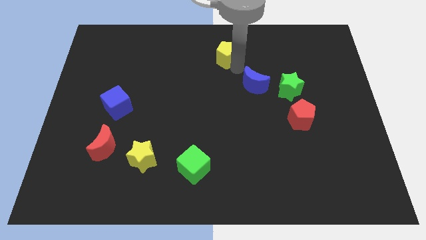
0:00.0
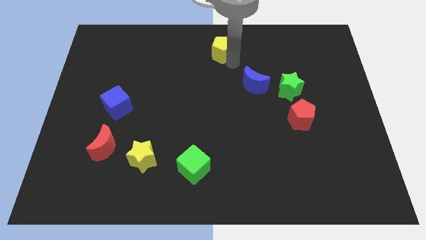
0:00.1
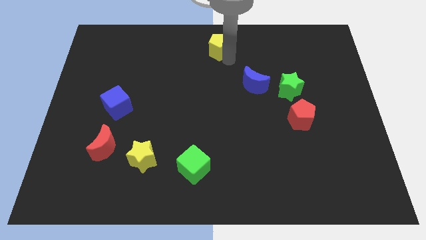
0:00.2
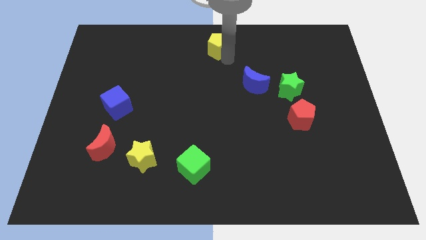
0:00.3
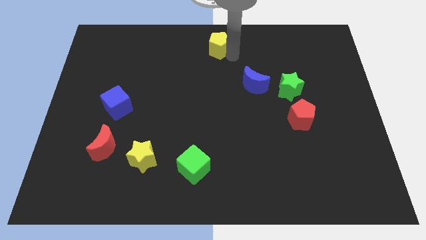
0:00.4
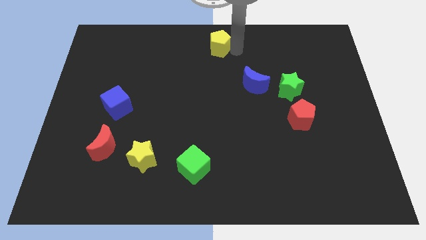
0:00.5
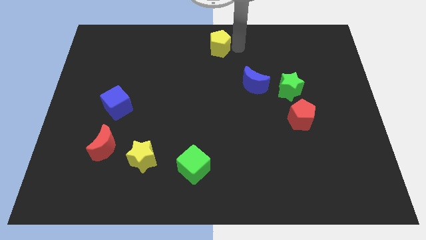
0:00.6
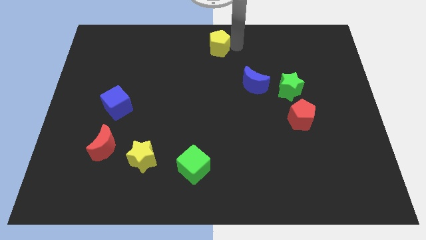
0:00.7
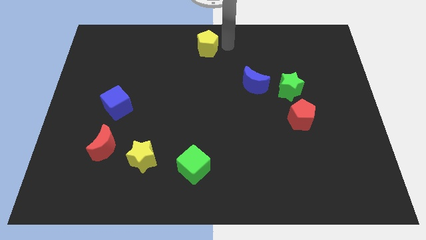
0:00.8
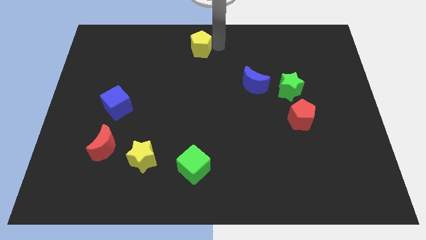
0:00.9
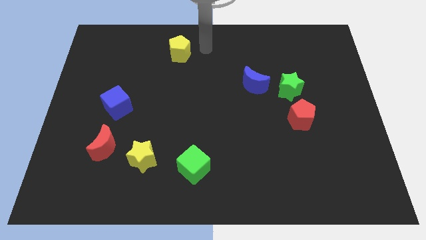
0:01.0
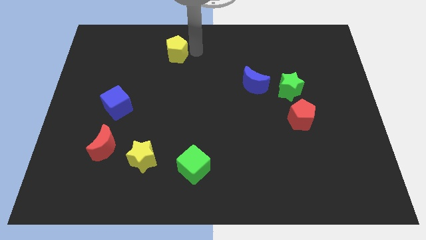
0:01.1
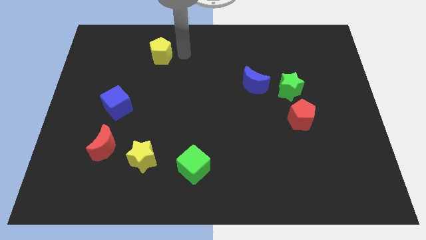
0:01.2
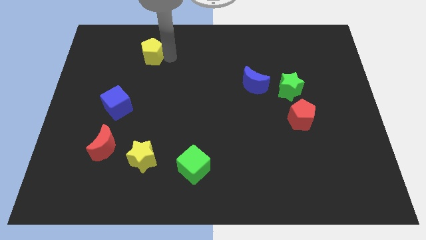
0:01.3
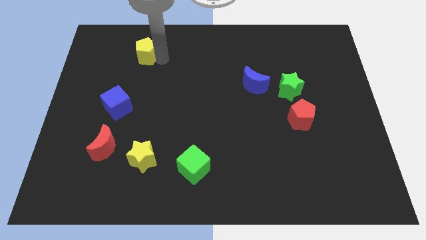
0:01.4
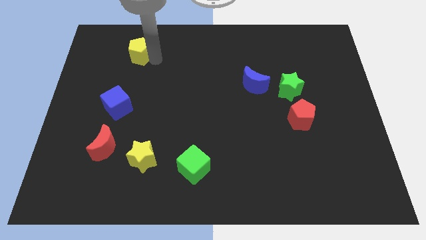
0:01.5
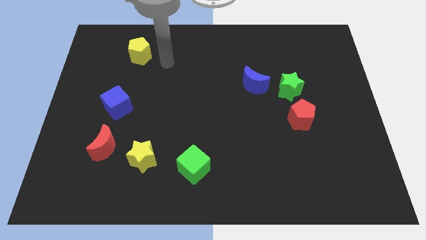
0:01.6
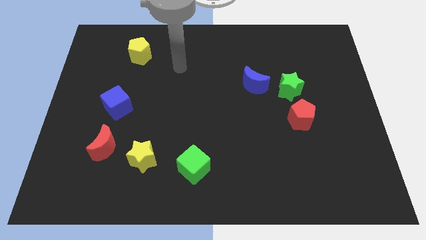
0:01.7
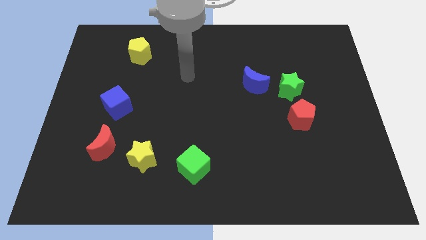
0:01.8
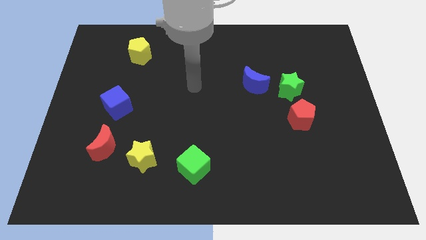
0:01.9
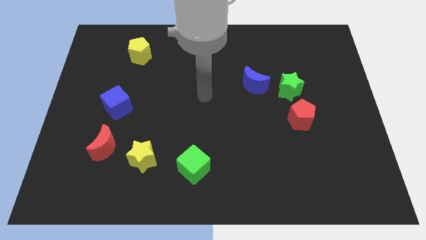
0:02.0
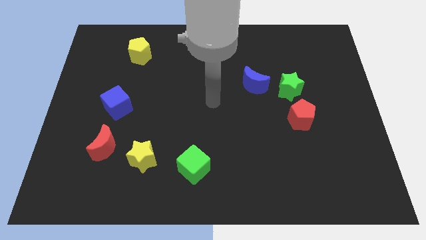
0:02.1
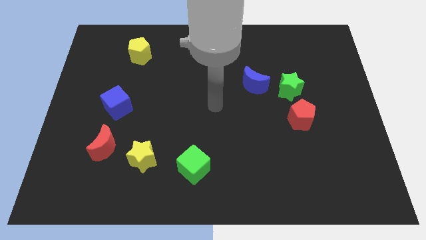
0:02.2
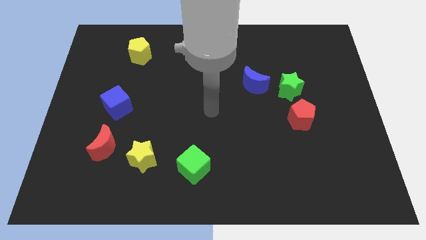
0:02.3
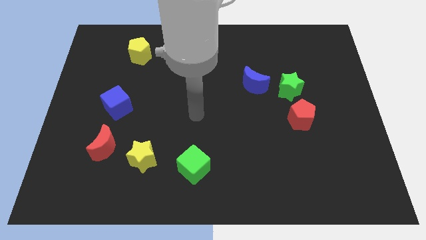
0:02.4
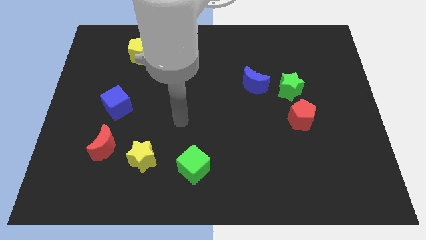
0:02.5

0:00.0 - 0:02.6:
push the yellow pentagon to the left side of the board and move away

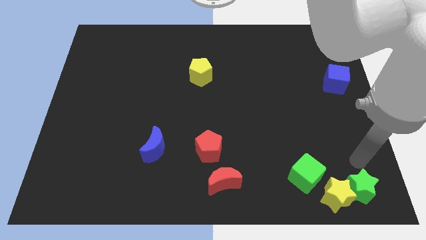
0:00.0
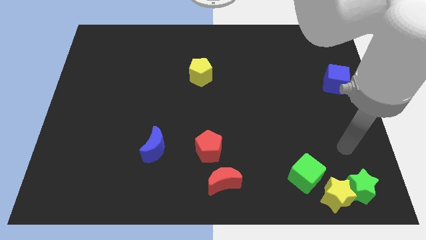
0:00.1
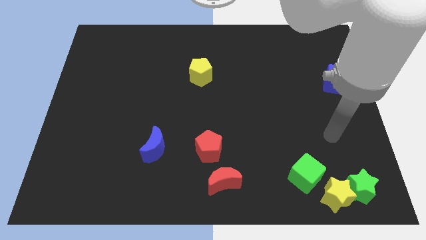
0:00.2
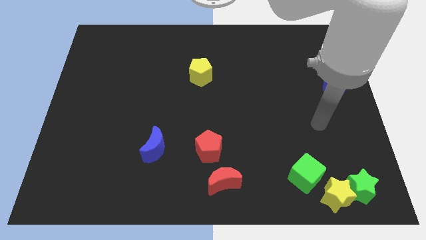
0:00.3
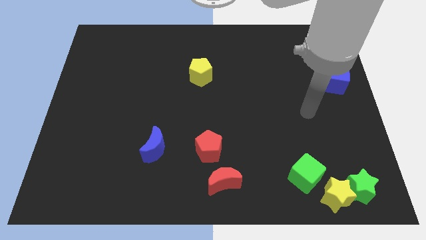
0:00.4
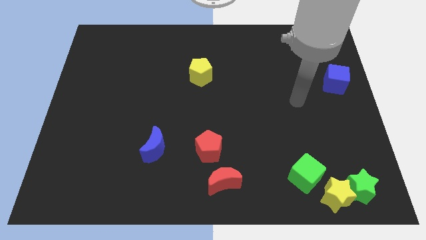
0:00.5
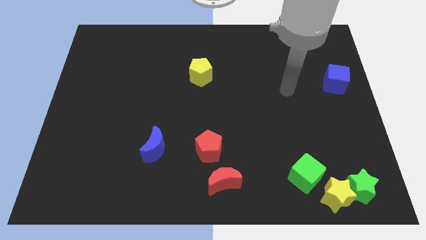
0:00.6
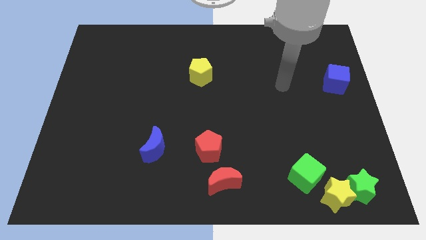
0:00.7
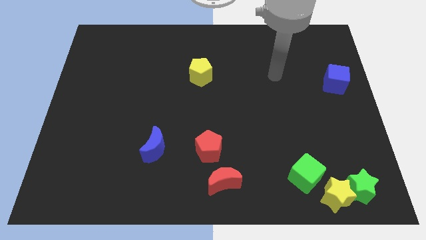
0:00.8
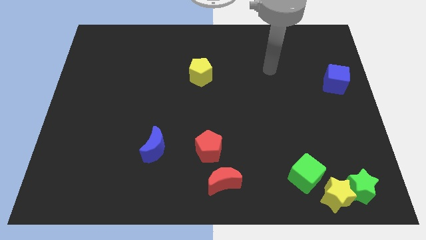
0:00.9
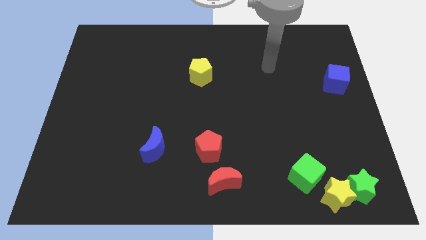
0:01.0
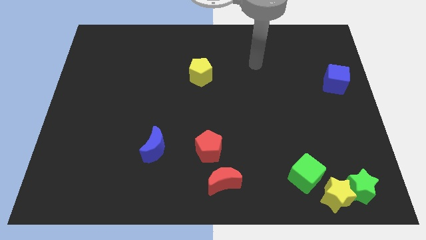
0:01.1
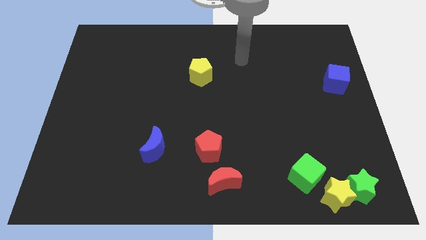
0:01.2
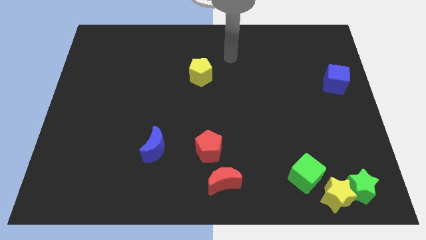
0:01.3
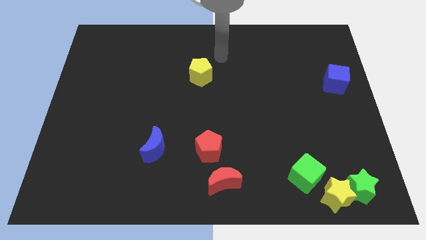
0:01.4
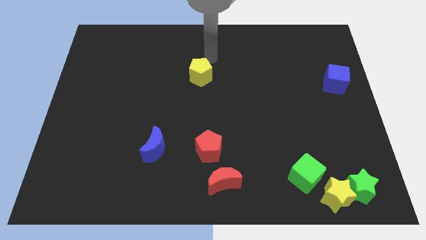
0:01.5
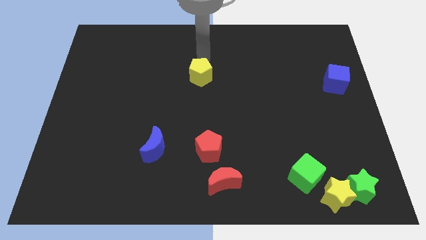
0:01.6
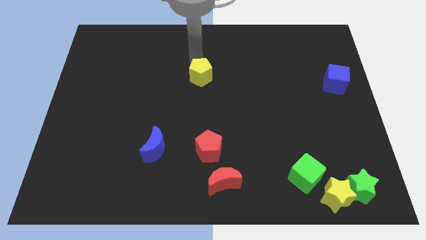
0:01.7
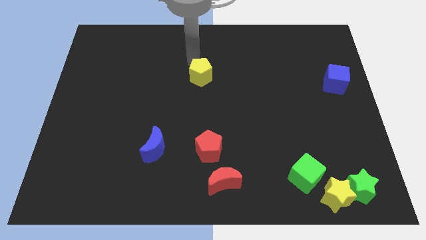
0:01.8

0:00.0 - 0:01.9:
point your hand above the yellow pentagon

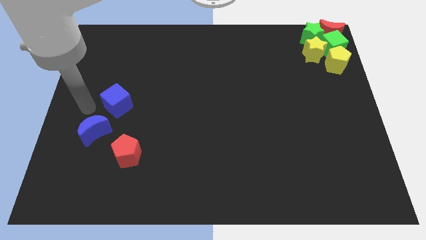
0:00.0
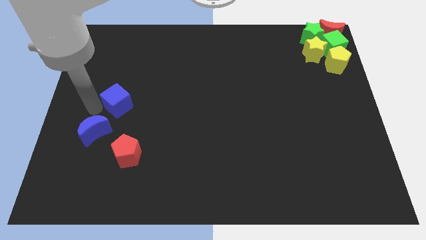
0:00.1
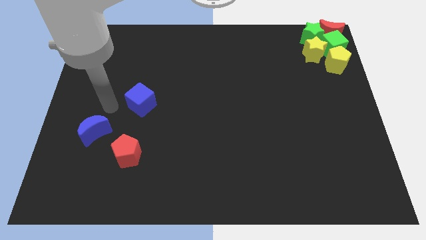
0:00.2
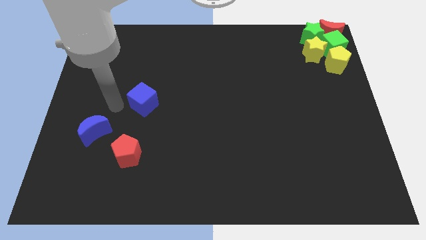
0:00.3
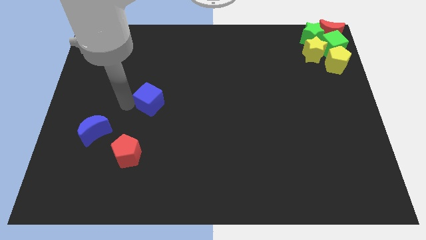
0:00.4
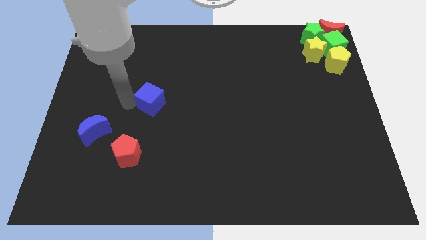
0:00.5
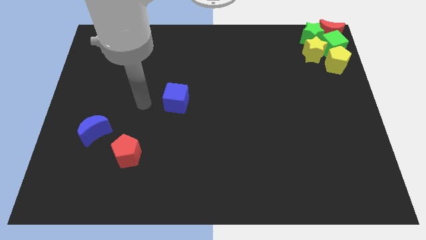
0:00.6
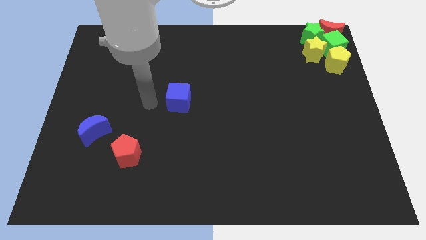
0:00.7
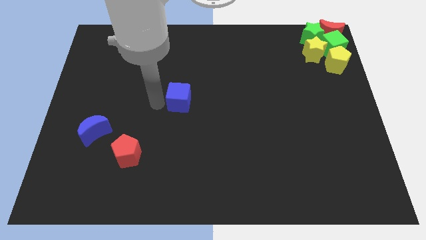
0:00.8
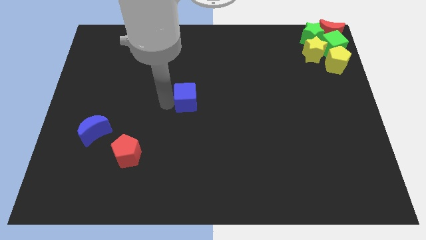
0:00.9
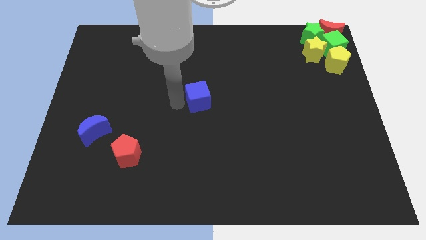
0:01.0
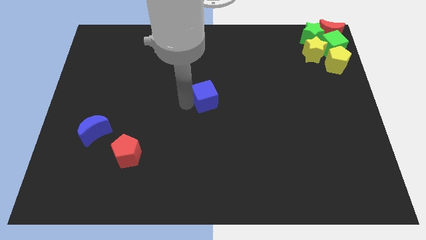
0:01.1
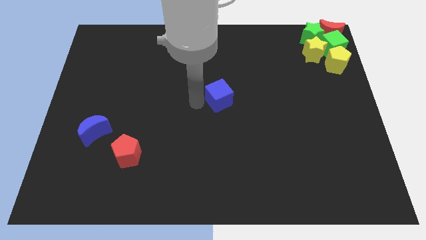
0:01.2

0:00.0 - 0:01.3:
move the blue cube towards the right side of the board

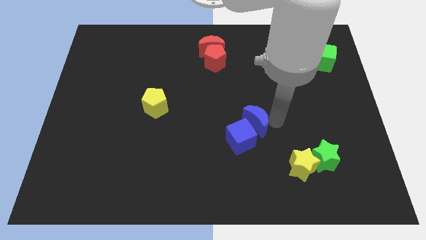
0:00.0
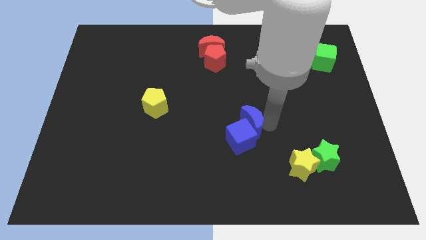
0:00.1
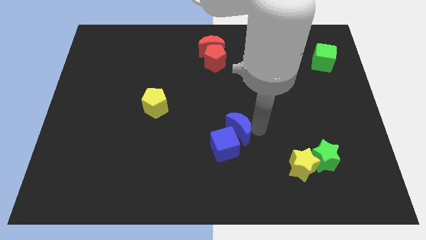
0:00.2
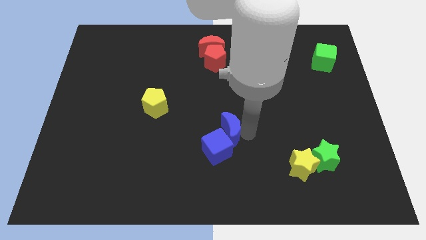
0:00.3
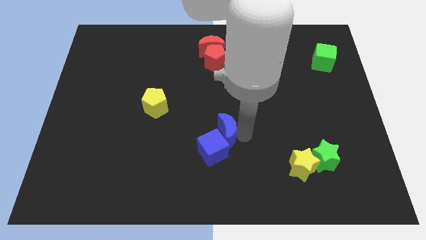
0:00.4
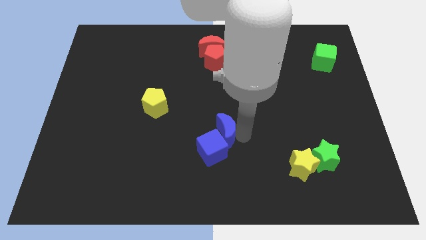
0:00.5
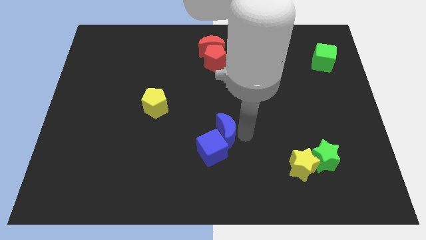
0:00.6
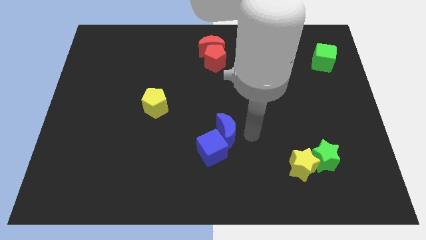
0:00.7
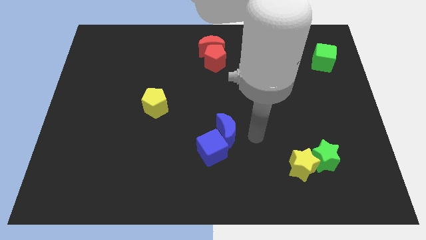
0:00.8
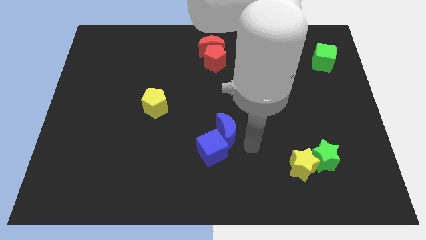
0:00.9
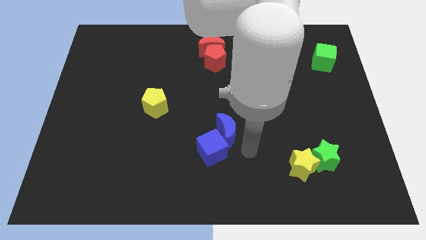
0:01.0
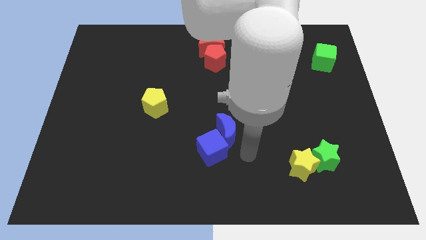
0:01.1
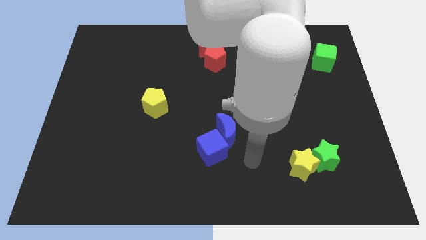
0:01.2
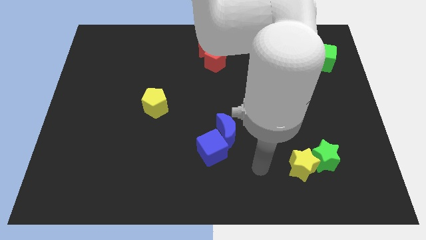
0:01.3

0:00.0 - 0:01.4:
place both the blue blocks diagonally on the bottom right side of the yellow pentagon

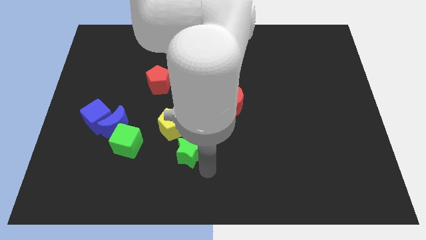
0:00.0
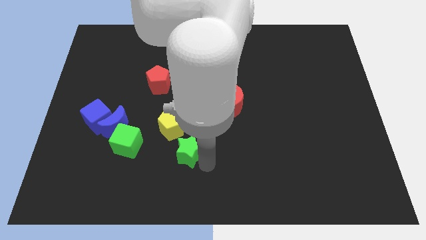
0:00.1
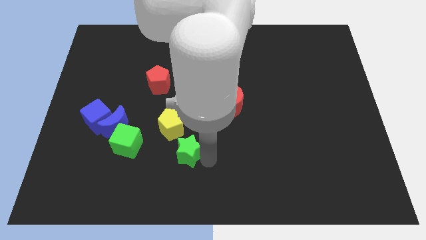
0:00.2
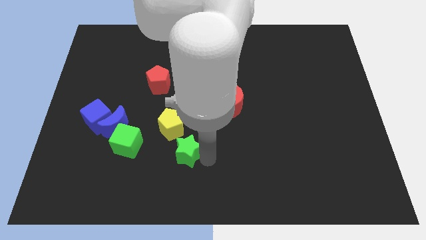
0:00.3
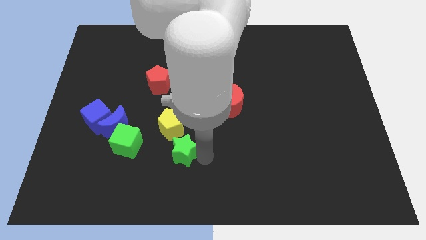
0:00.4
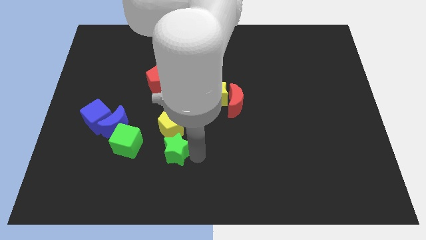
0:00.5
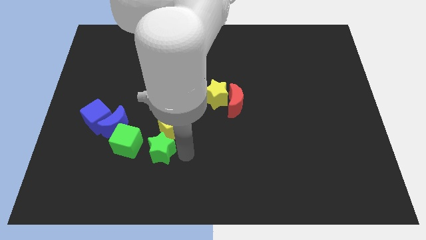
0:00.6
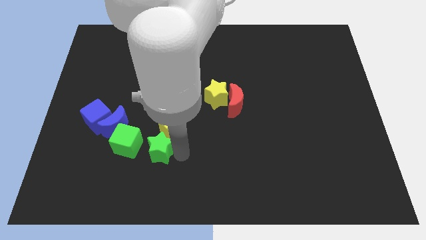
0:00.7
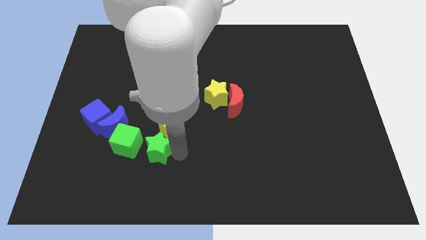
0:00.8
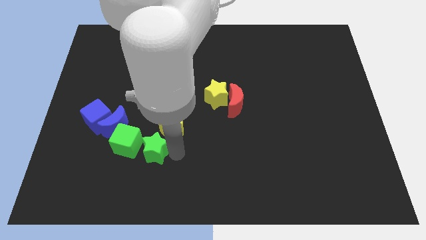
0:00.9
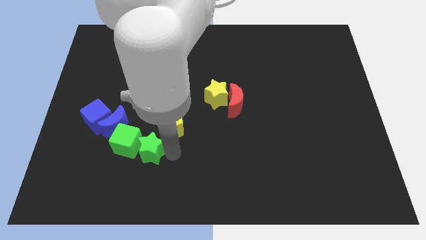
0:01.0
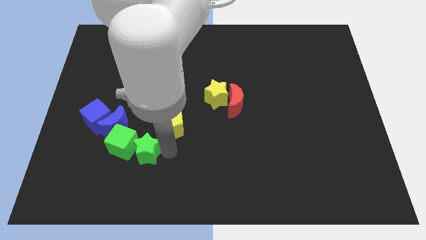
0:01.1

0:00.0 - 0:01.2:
place the green star to the right of green cube

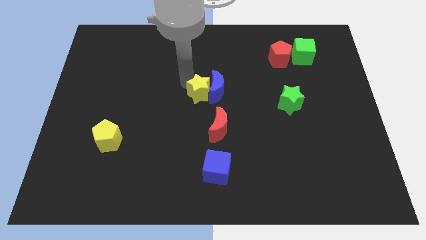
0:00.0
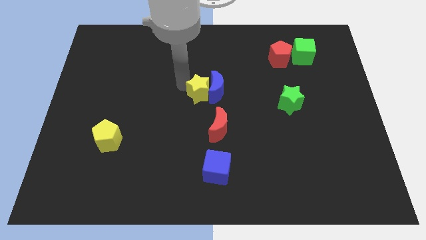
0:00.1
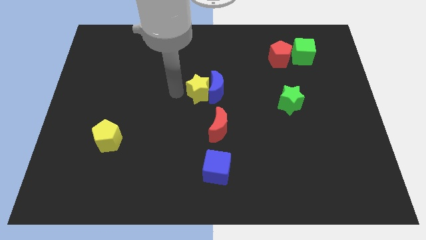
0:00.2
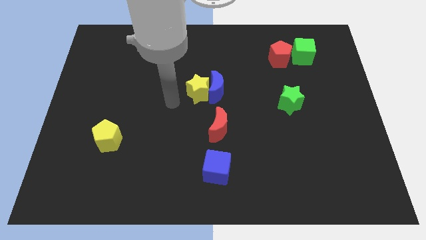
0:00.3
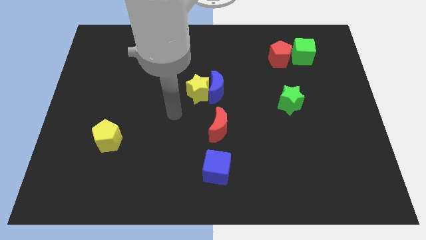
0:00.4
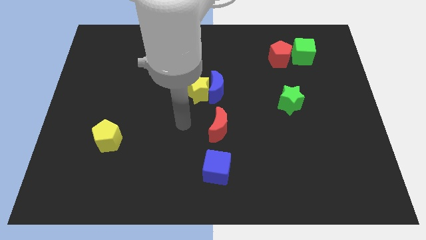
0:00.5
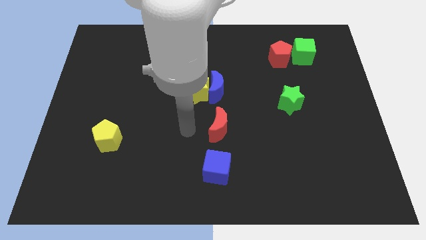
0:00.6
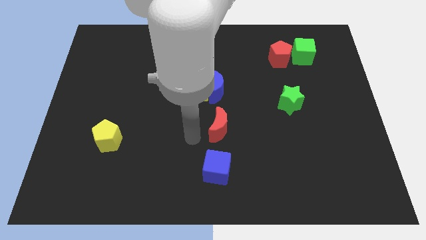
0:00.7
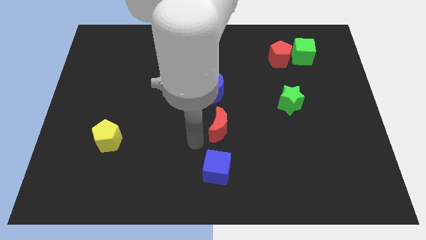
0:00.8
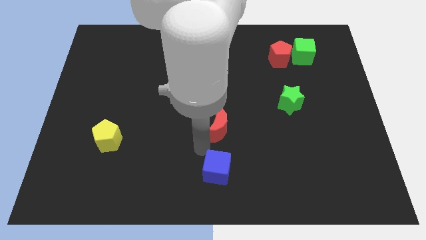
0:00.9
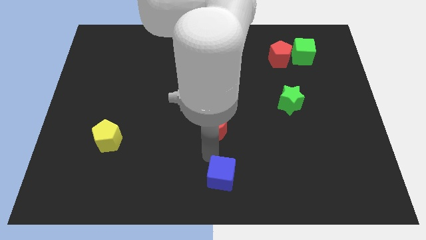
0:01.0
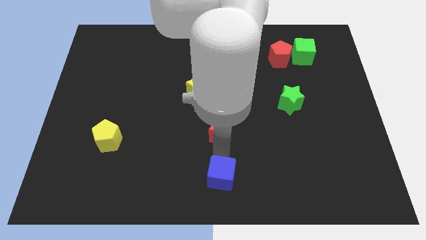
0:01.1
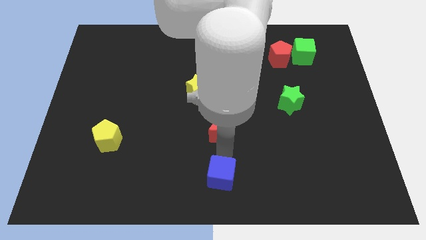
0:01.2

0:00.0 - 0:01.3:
move your arm away from the yellow star
